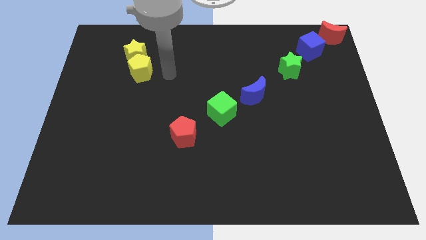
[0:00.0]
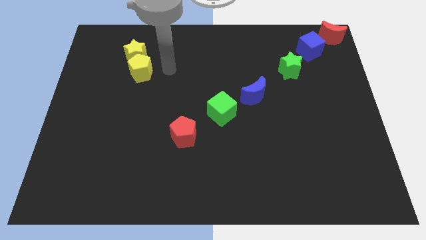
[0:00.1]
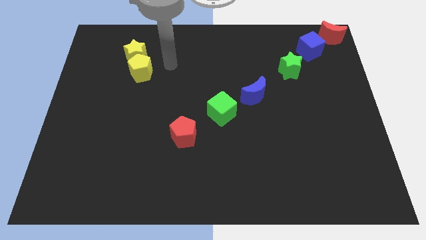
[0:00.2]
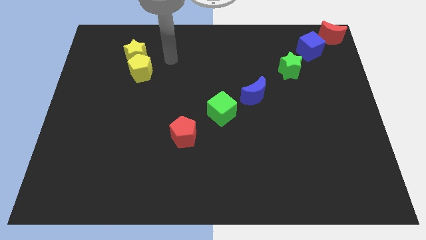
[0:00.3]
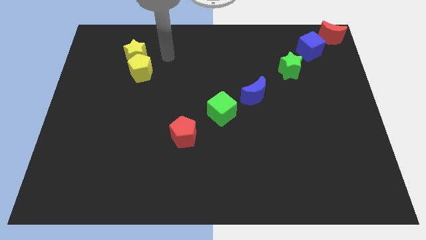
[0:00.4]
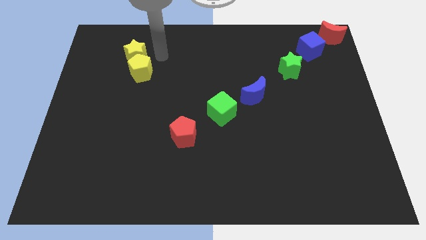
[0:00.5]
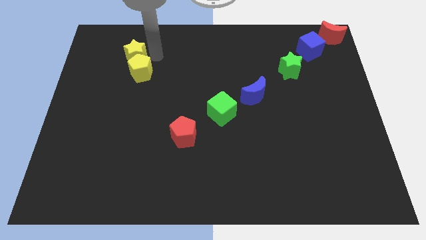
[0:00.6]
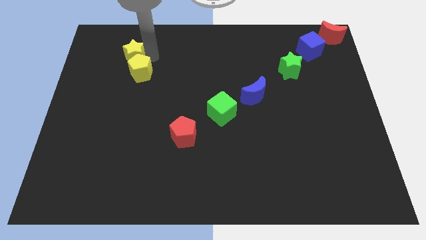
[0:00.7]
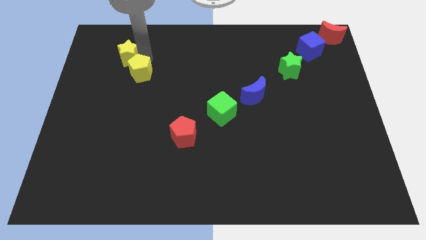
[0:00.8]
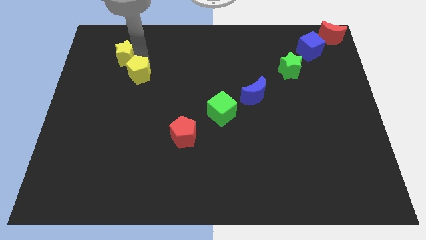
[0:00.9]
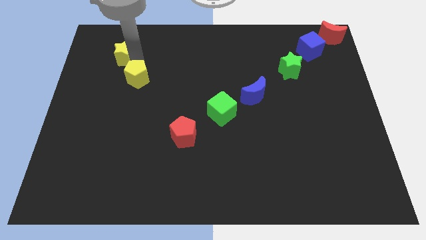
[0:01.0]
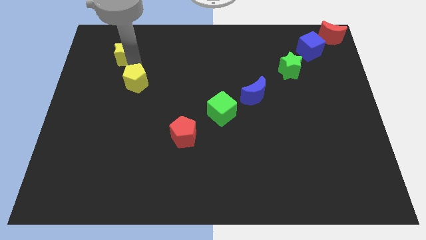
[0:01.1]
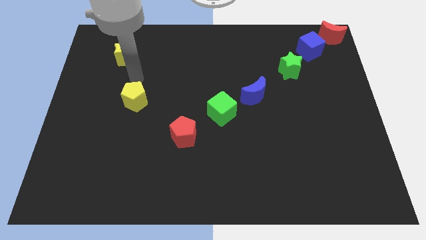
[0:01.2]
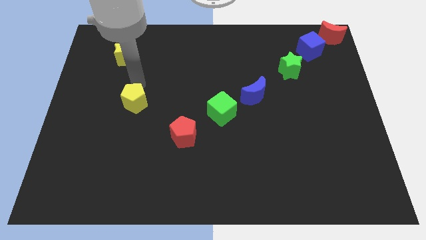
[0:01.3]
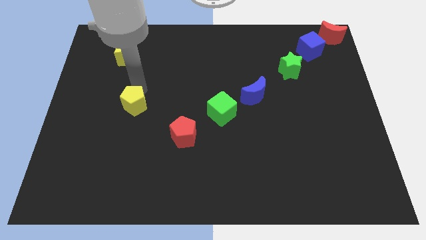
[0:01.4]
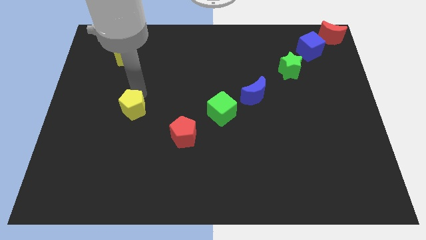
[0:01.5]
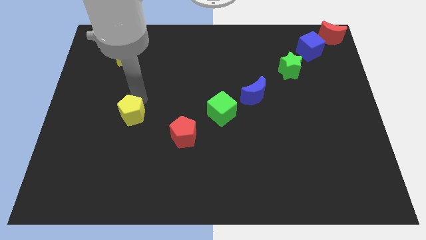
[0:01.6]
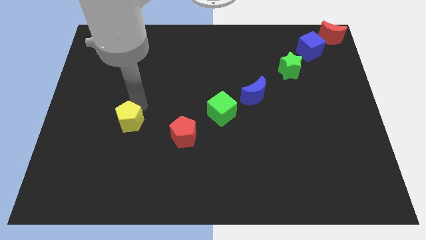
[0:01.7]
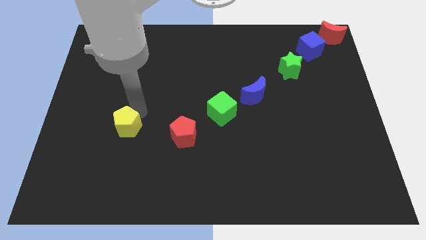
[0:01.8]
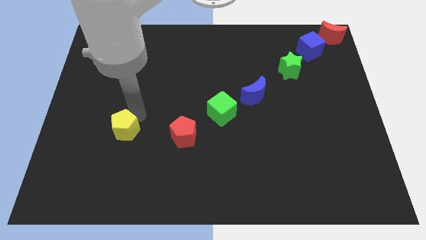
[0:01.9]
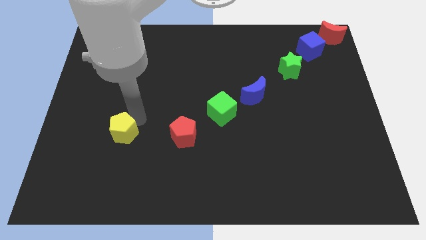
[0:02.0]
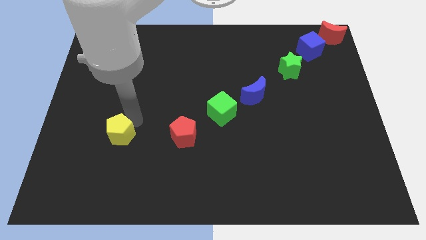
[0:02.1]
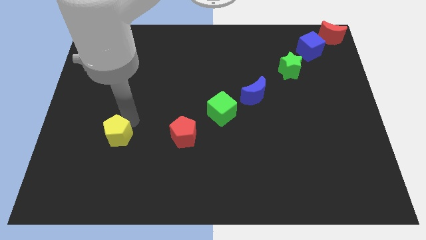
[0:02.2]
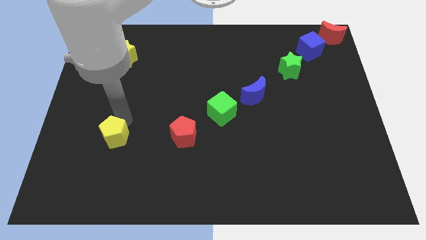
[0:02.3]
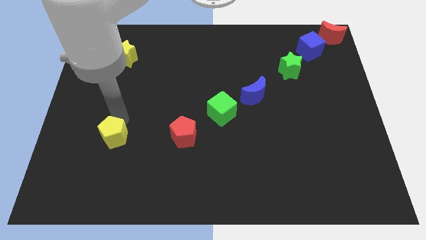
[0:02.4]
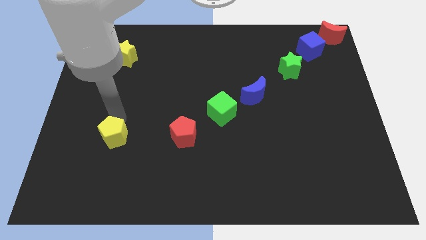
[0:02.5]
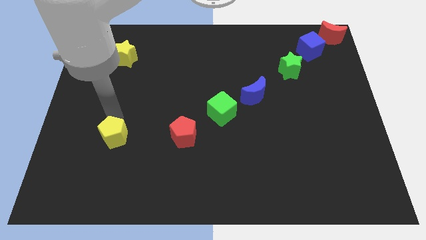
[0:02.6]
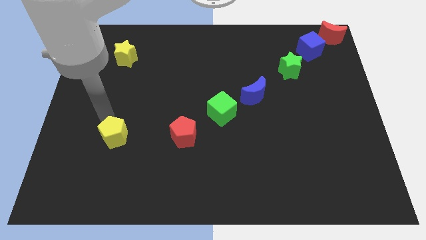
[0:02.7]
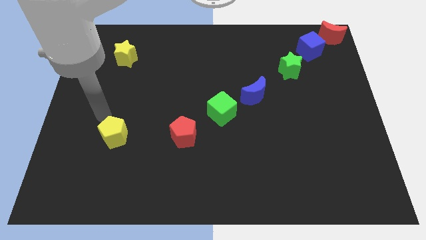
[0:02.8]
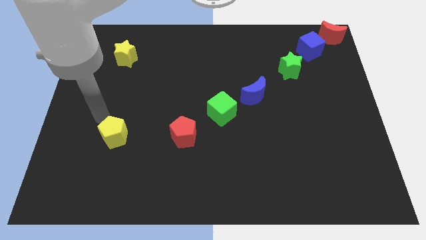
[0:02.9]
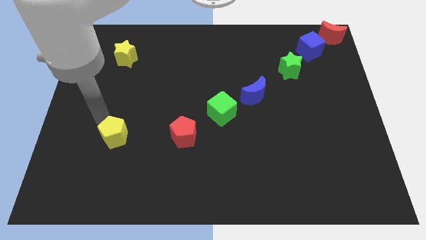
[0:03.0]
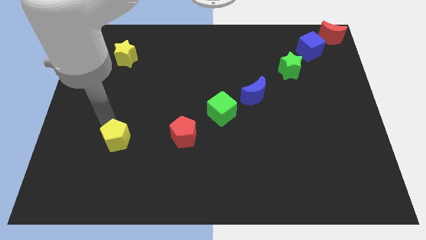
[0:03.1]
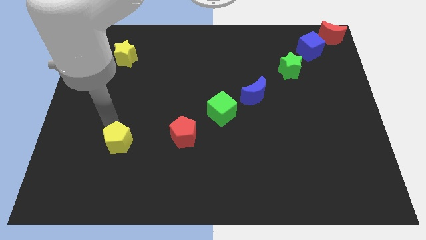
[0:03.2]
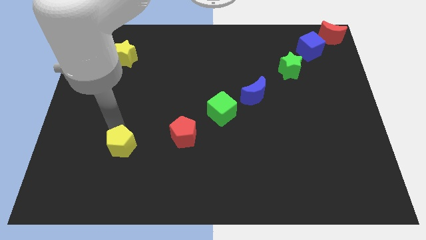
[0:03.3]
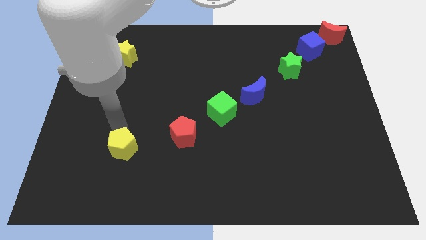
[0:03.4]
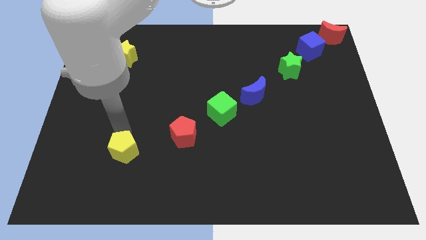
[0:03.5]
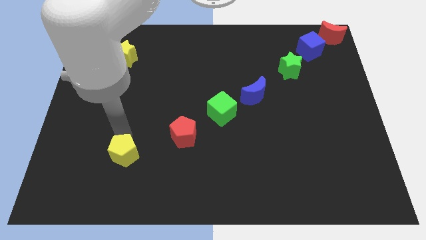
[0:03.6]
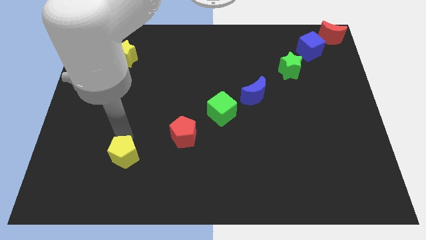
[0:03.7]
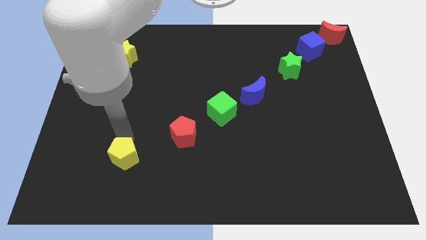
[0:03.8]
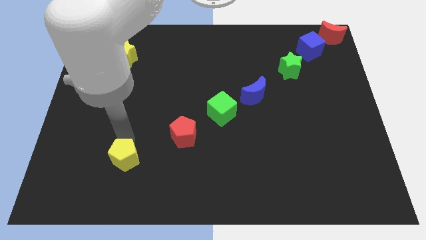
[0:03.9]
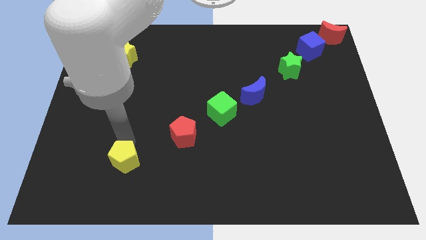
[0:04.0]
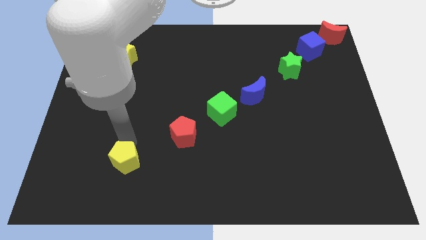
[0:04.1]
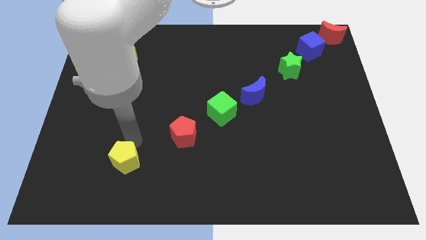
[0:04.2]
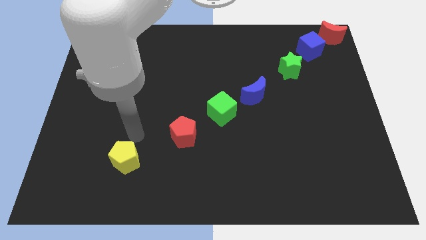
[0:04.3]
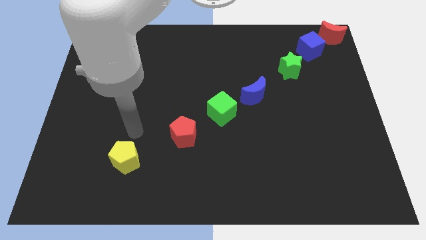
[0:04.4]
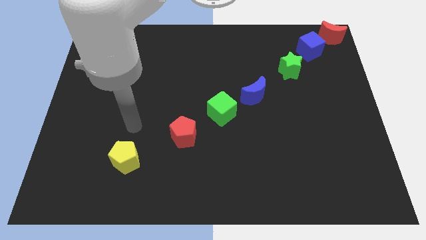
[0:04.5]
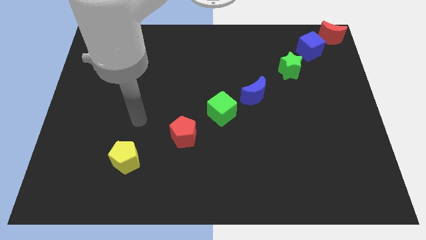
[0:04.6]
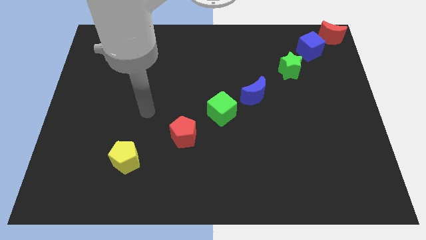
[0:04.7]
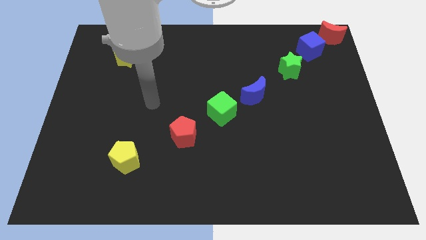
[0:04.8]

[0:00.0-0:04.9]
push the yellowpentagon away from the yellow star

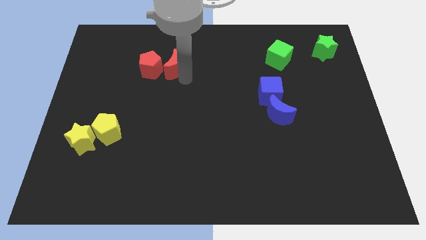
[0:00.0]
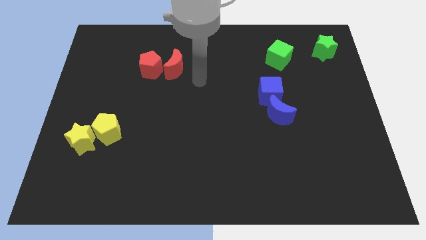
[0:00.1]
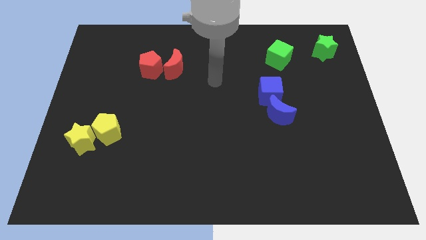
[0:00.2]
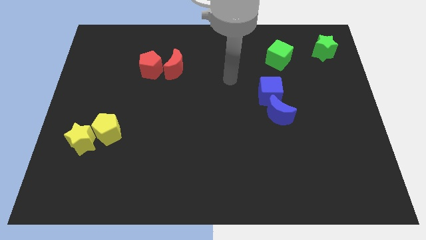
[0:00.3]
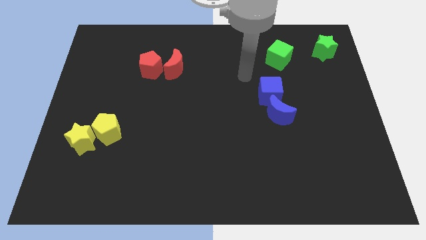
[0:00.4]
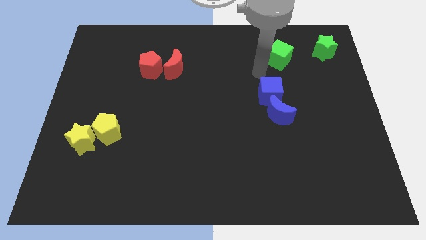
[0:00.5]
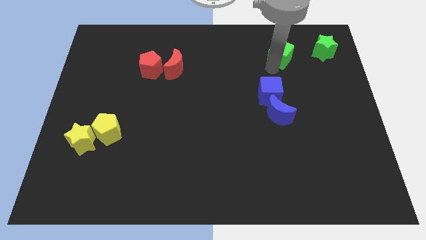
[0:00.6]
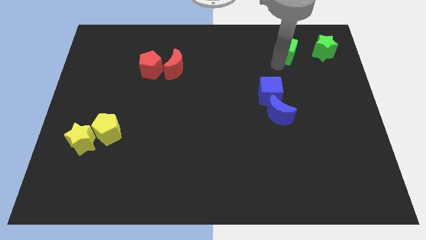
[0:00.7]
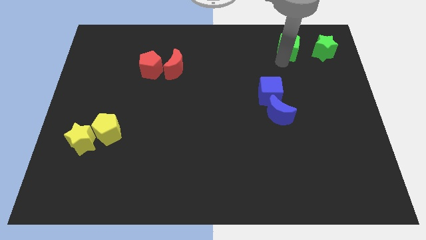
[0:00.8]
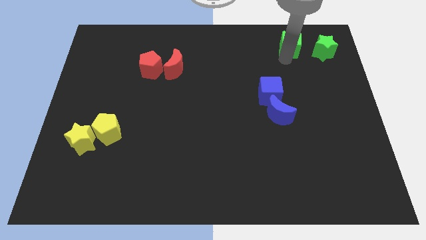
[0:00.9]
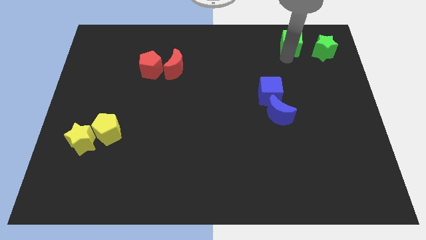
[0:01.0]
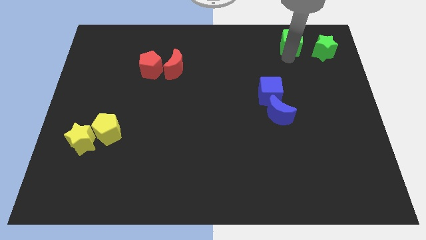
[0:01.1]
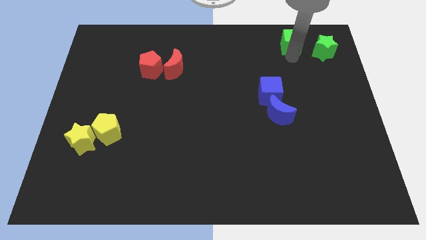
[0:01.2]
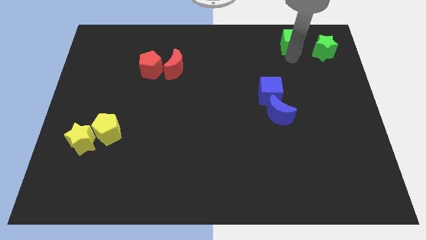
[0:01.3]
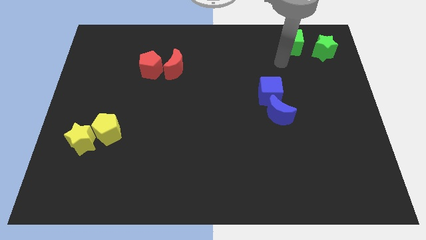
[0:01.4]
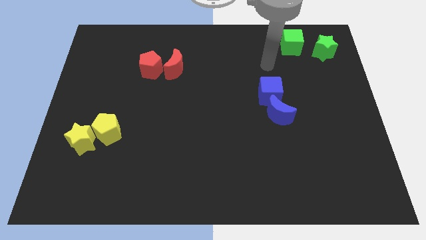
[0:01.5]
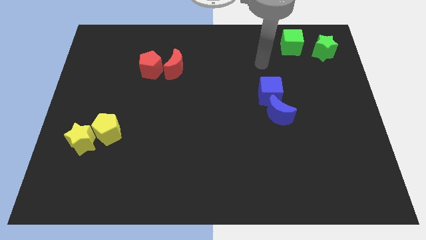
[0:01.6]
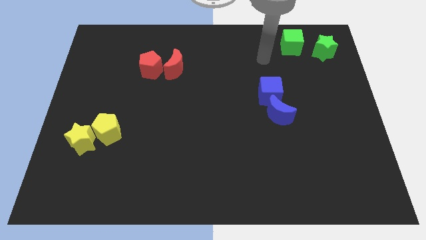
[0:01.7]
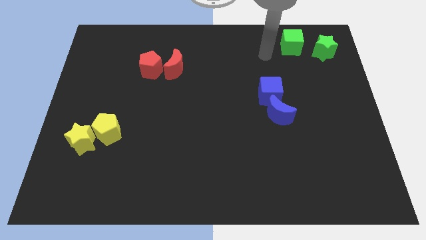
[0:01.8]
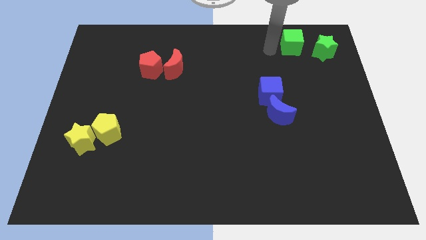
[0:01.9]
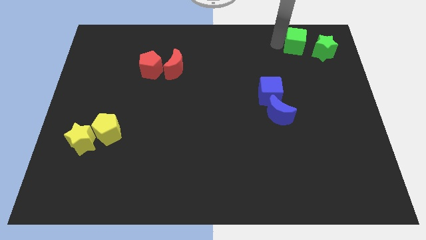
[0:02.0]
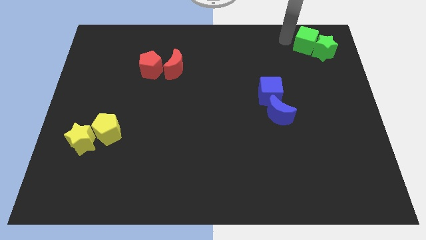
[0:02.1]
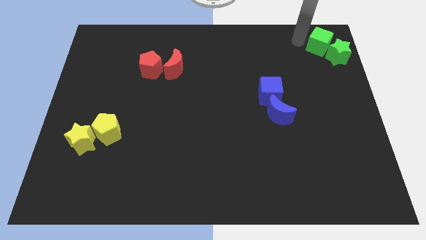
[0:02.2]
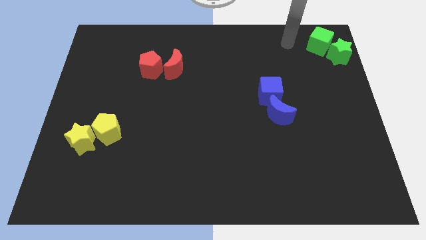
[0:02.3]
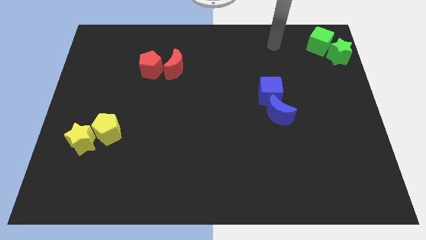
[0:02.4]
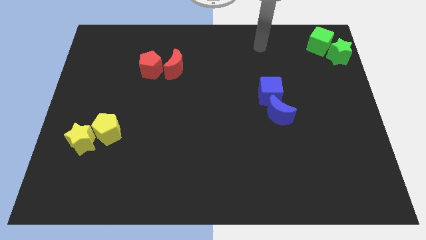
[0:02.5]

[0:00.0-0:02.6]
move the green cube into the green star

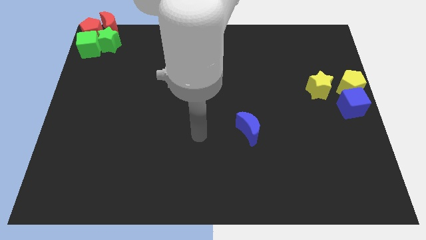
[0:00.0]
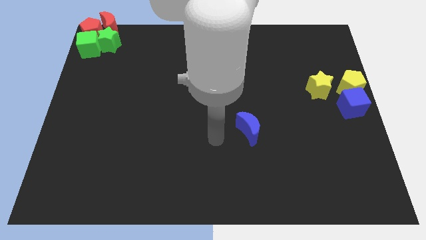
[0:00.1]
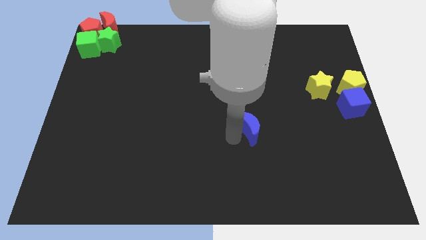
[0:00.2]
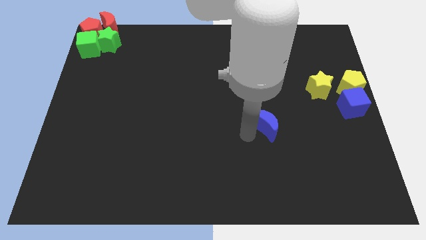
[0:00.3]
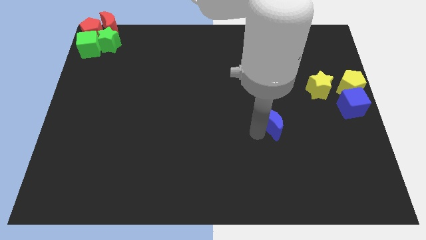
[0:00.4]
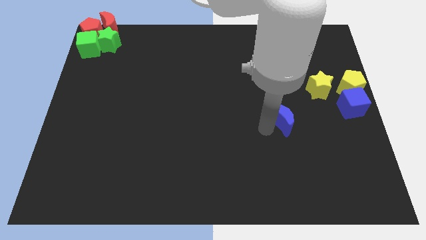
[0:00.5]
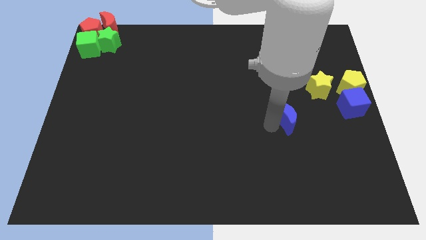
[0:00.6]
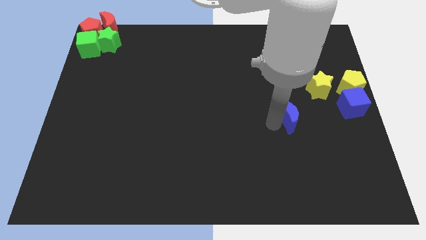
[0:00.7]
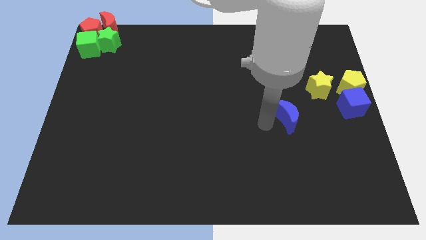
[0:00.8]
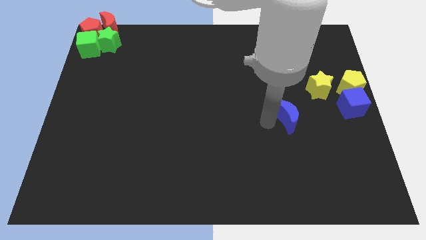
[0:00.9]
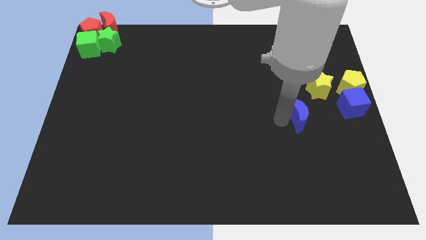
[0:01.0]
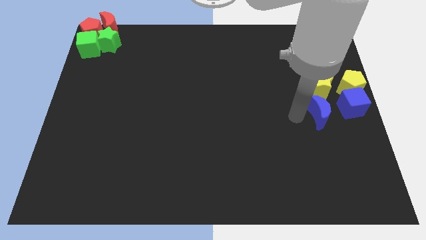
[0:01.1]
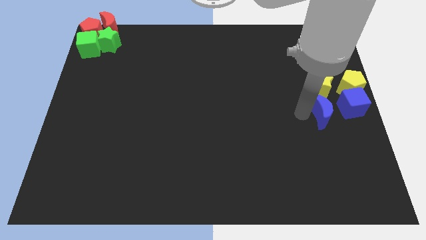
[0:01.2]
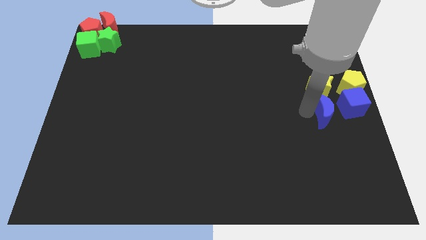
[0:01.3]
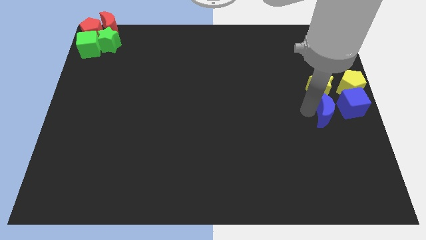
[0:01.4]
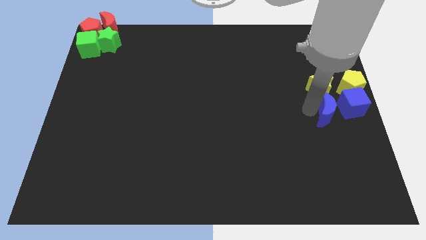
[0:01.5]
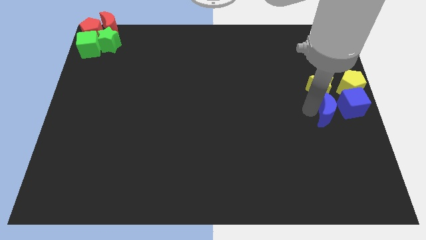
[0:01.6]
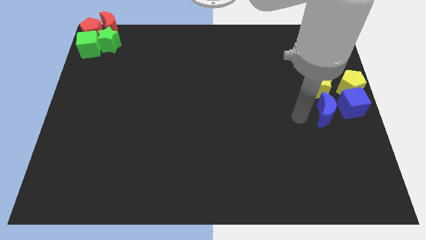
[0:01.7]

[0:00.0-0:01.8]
place the blue moon to the left of the blue cube
